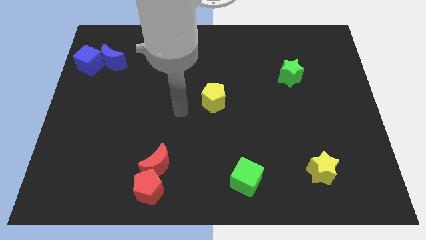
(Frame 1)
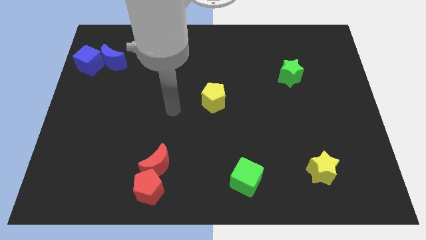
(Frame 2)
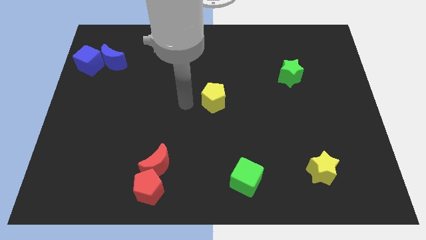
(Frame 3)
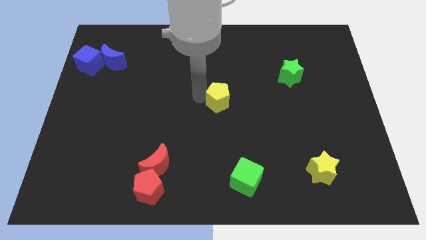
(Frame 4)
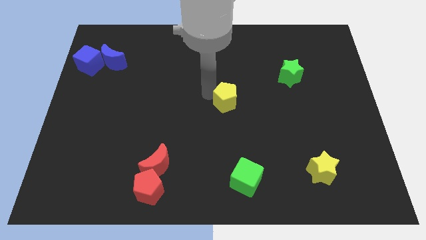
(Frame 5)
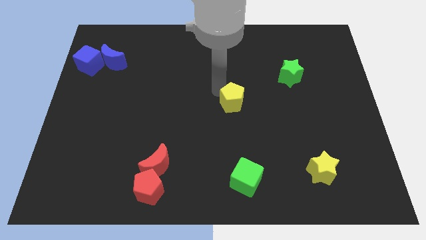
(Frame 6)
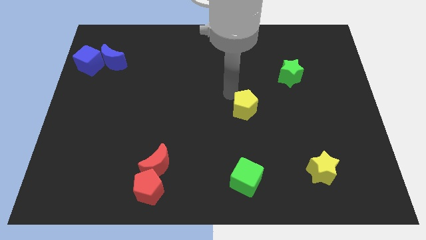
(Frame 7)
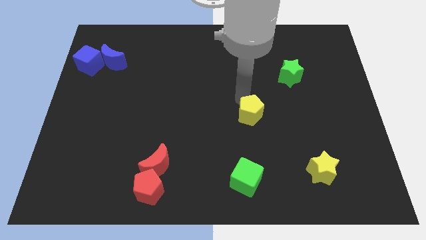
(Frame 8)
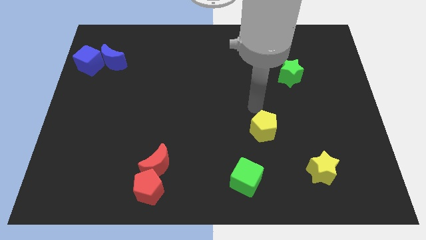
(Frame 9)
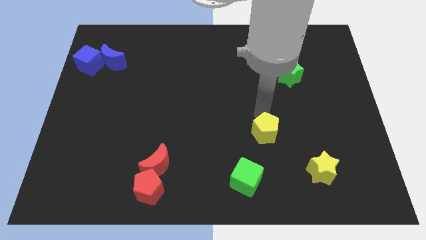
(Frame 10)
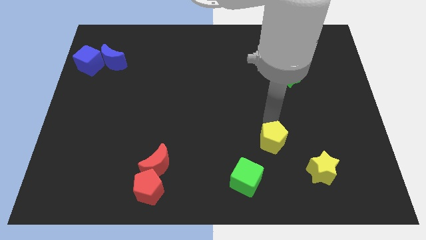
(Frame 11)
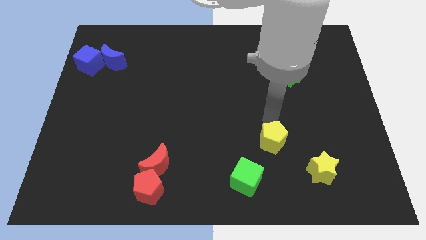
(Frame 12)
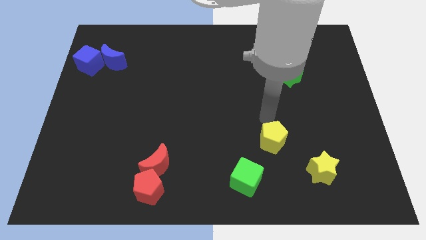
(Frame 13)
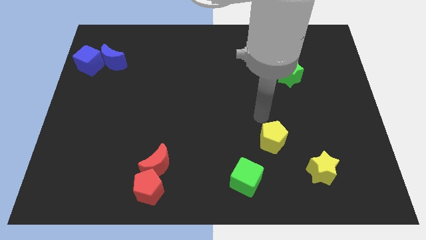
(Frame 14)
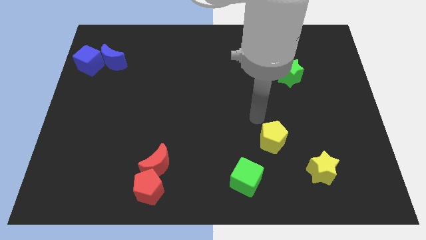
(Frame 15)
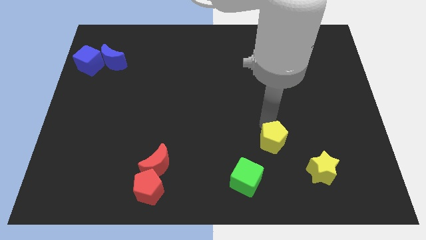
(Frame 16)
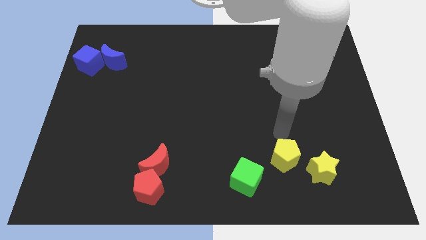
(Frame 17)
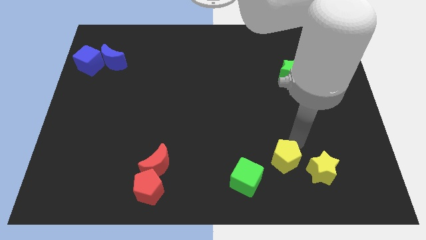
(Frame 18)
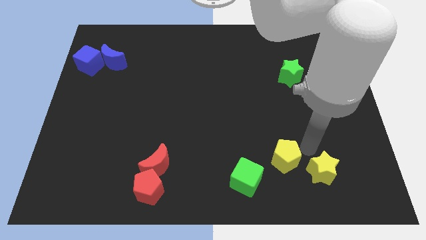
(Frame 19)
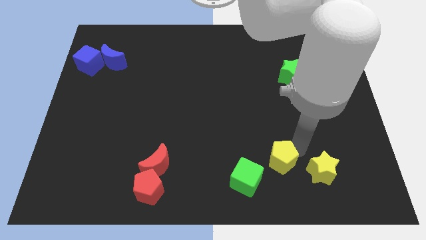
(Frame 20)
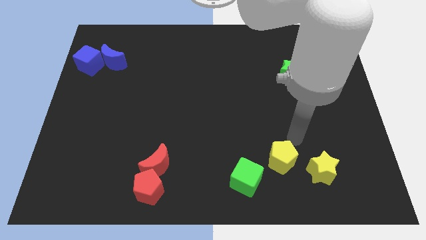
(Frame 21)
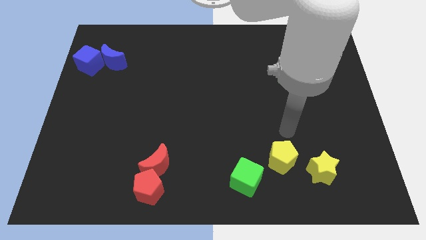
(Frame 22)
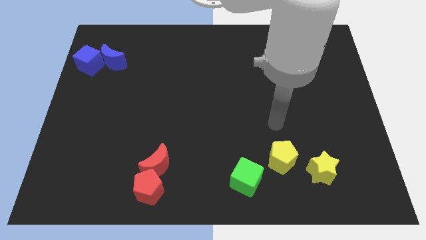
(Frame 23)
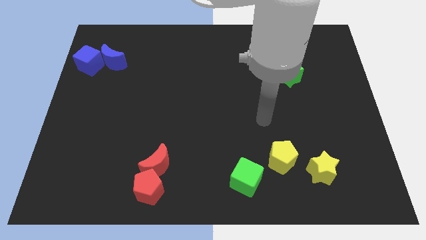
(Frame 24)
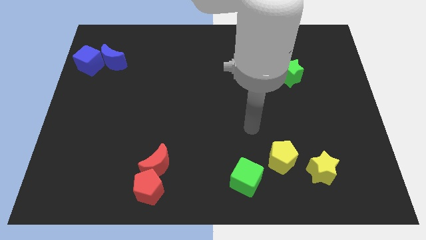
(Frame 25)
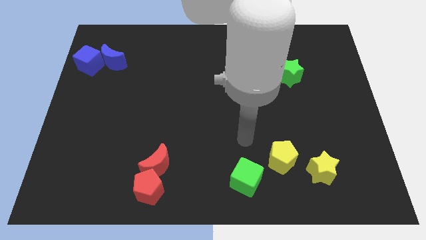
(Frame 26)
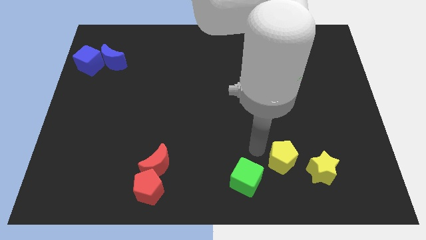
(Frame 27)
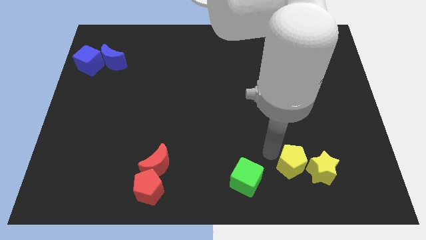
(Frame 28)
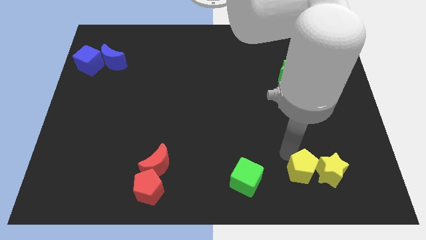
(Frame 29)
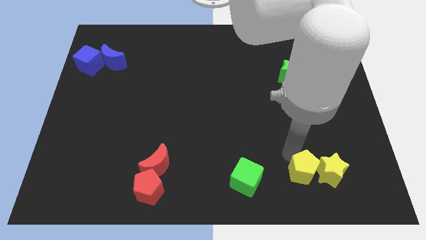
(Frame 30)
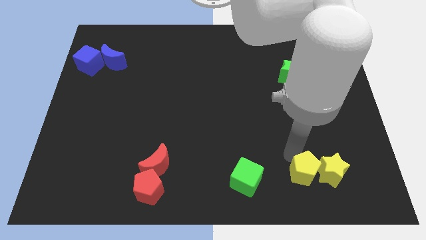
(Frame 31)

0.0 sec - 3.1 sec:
place the yellow pentagon to the right of the green cube

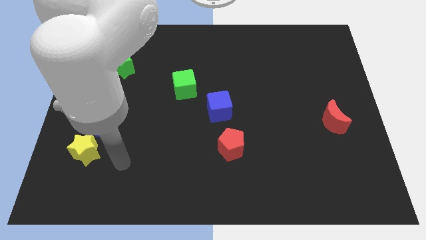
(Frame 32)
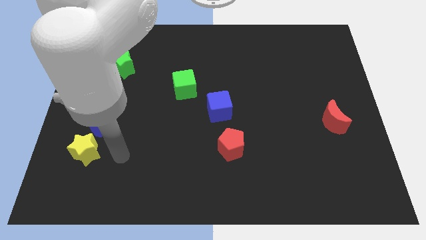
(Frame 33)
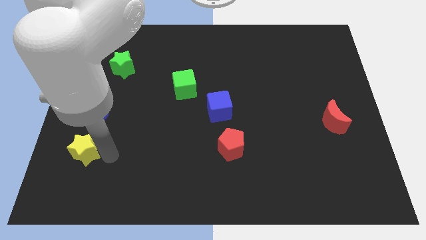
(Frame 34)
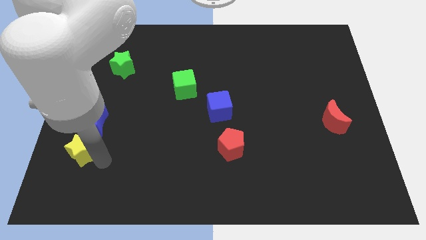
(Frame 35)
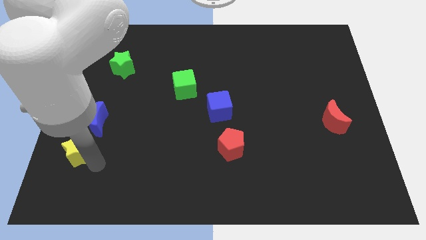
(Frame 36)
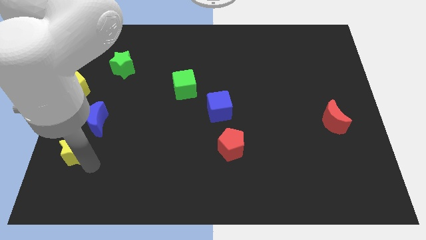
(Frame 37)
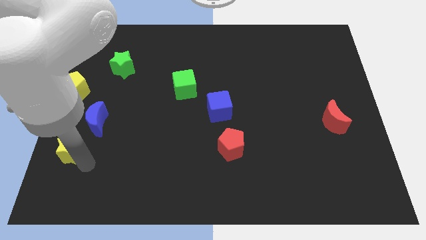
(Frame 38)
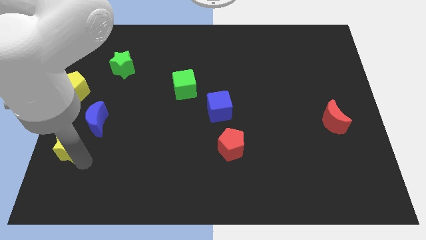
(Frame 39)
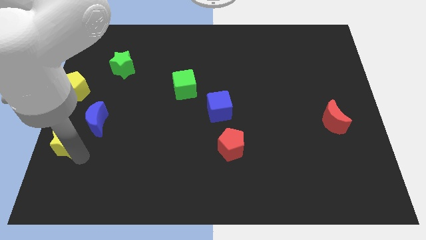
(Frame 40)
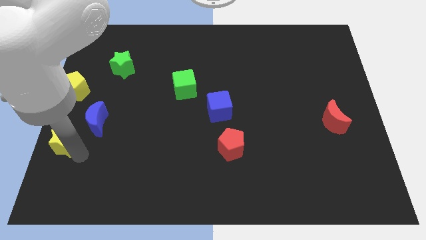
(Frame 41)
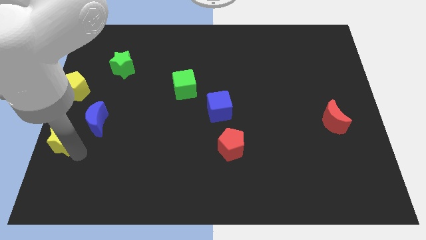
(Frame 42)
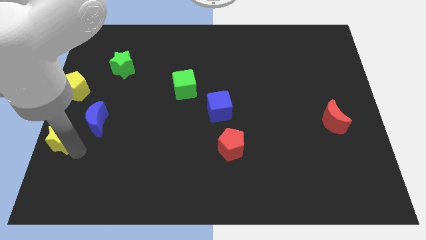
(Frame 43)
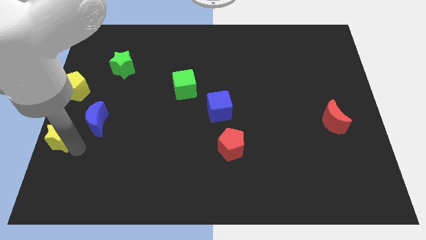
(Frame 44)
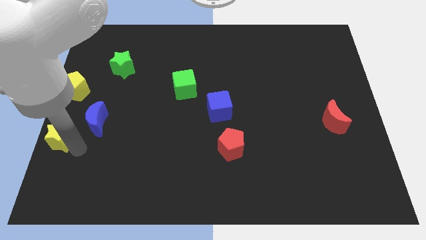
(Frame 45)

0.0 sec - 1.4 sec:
place the yellow star vertically below the yellow pentagon

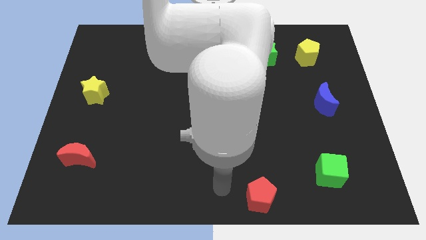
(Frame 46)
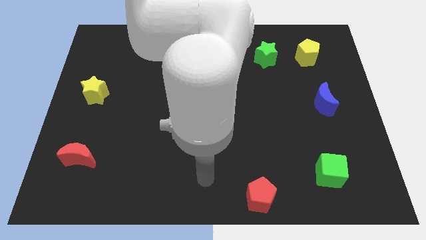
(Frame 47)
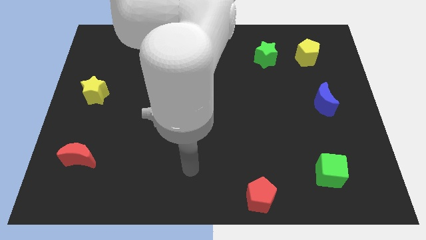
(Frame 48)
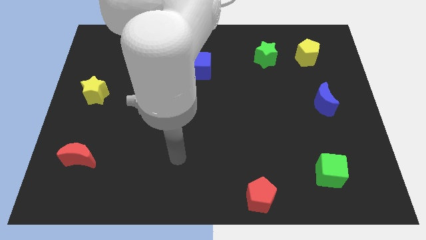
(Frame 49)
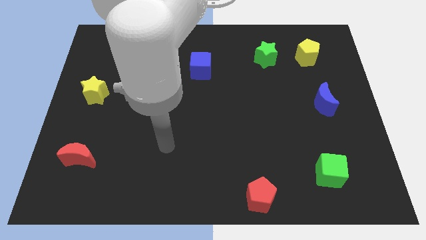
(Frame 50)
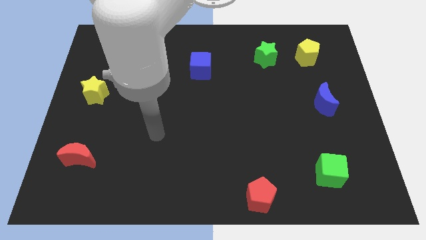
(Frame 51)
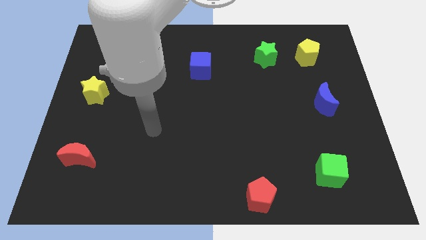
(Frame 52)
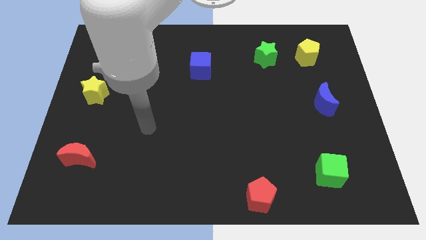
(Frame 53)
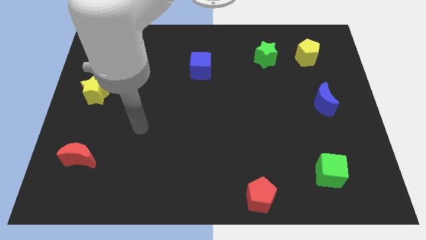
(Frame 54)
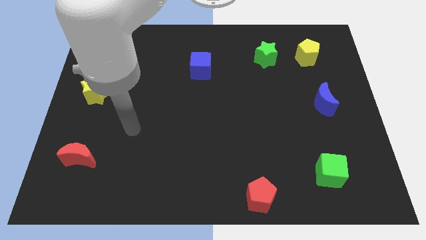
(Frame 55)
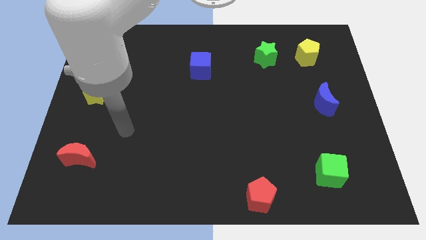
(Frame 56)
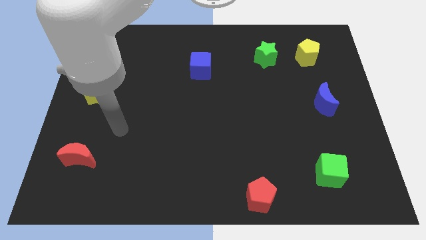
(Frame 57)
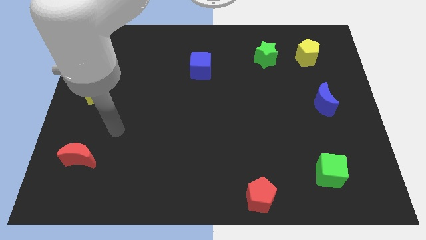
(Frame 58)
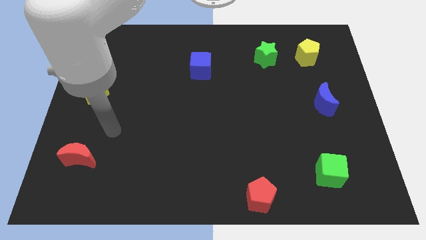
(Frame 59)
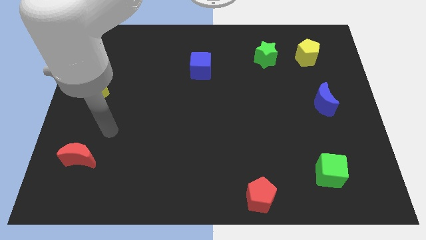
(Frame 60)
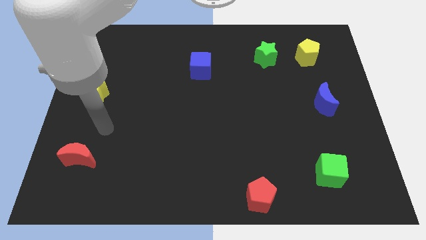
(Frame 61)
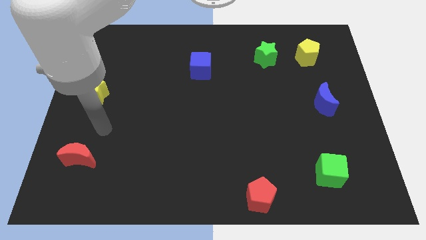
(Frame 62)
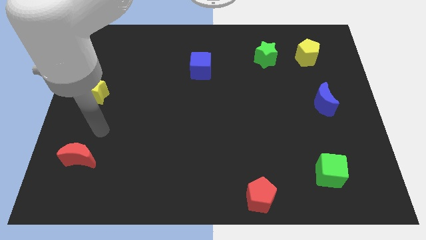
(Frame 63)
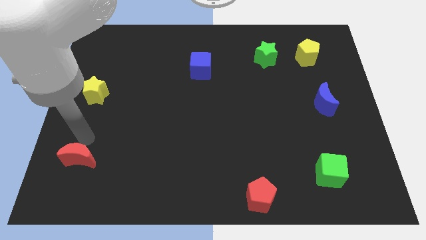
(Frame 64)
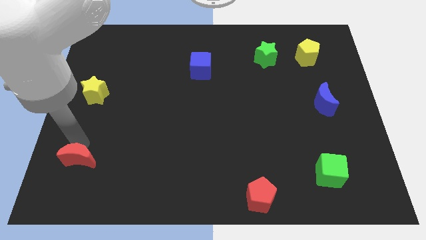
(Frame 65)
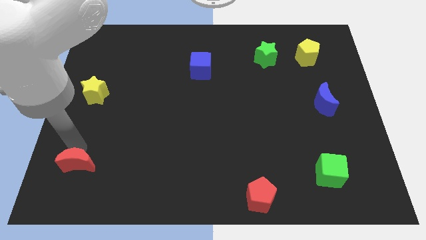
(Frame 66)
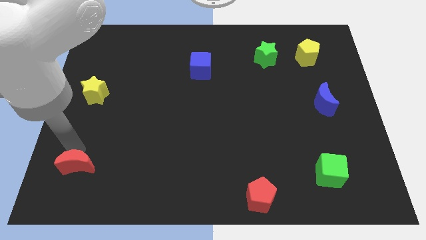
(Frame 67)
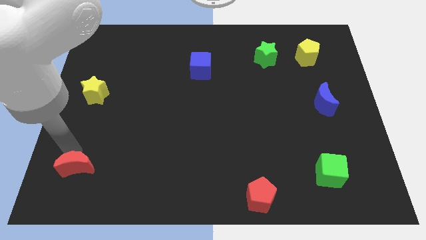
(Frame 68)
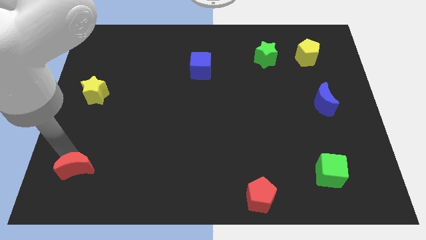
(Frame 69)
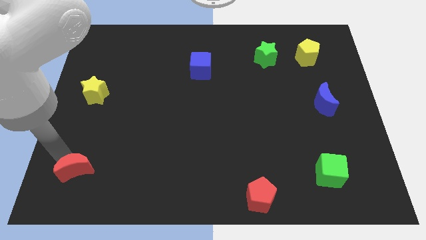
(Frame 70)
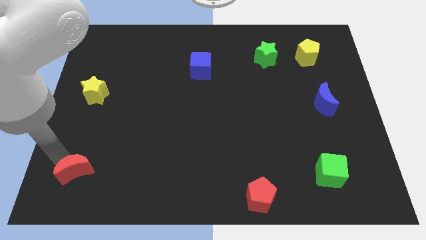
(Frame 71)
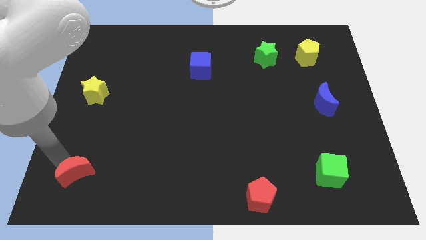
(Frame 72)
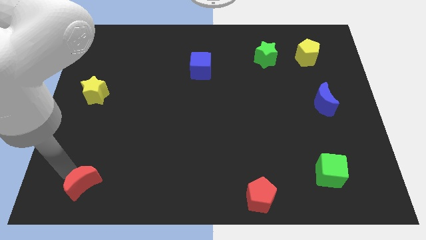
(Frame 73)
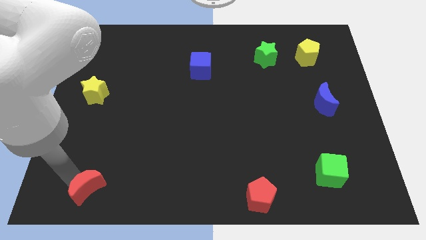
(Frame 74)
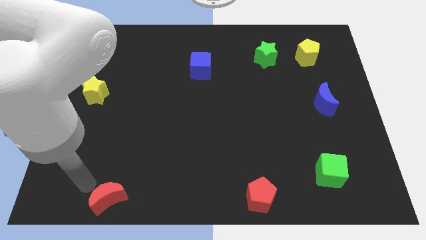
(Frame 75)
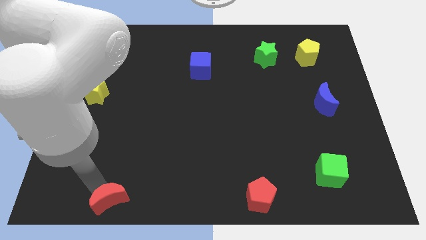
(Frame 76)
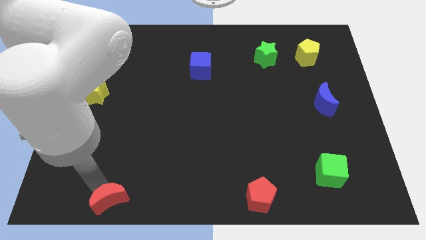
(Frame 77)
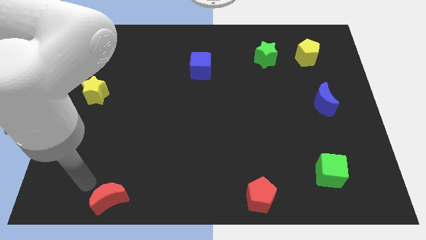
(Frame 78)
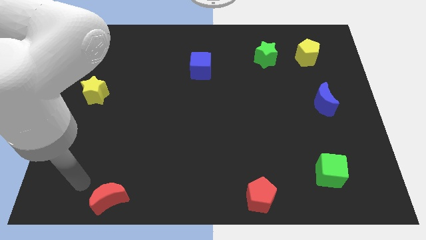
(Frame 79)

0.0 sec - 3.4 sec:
move the red crescent diagonally bottom right to the yellow star

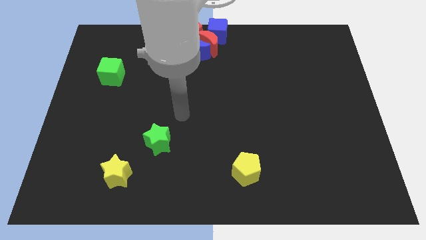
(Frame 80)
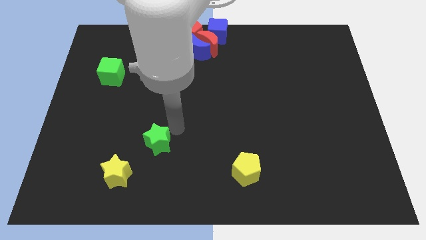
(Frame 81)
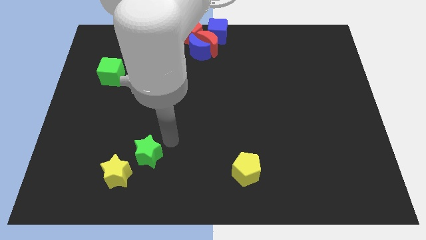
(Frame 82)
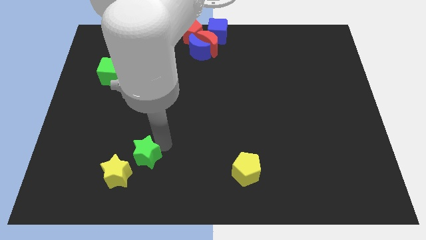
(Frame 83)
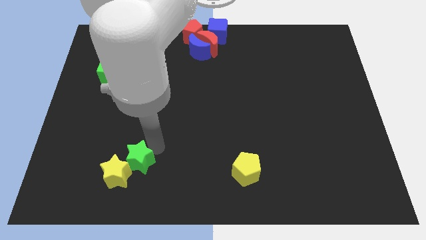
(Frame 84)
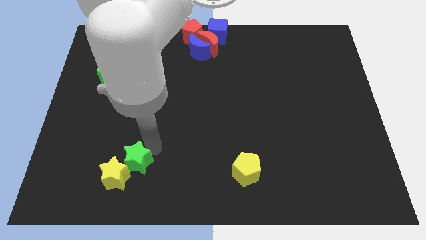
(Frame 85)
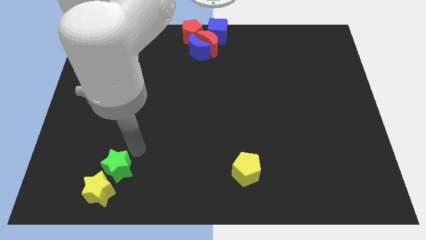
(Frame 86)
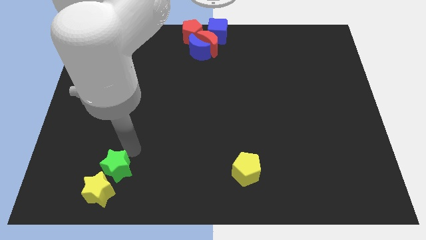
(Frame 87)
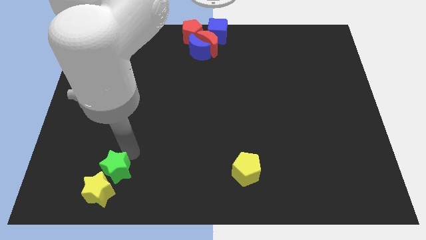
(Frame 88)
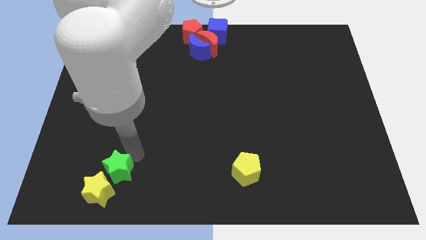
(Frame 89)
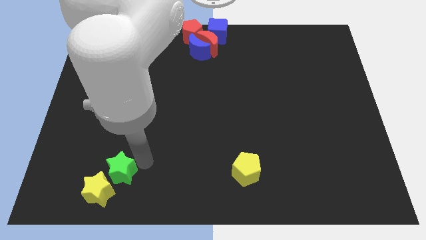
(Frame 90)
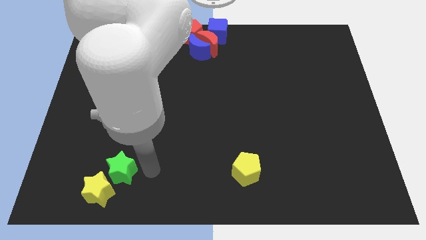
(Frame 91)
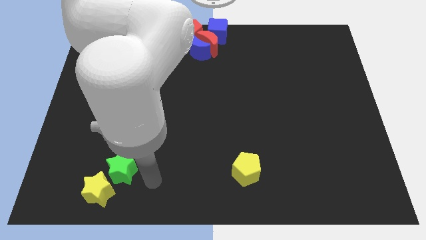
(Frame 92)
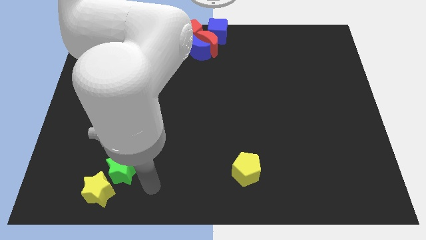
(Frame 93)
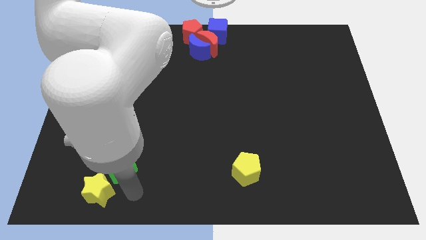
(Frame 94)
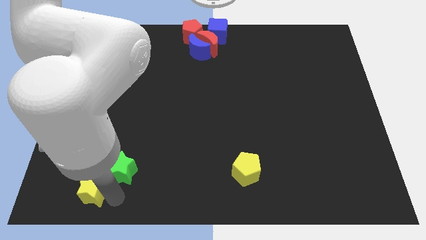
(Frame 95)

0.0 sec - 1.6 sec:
move the green star along with the yellow star towards the bottom left
